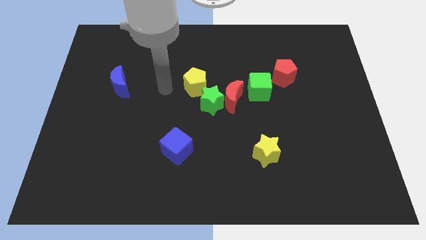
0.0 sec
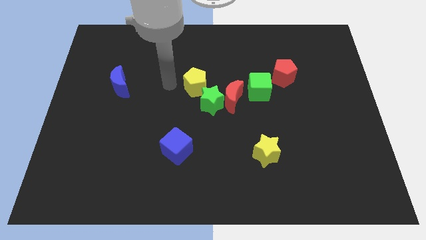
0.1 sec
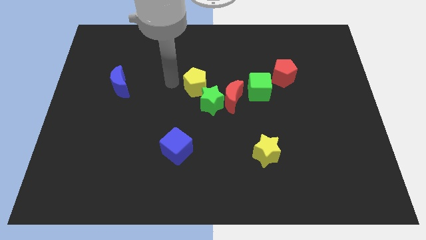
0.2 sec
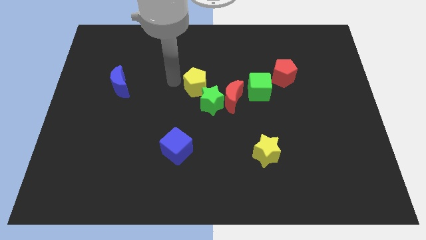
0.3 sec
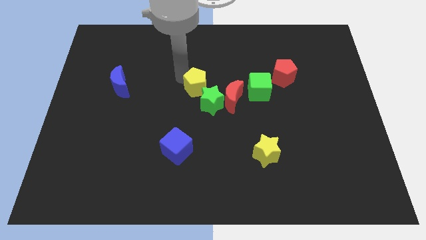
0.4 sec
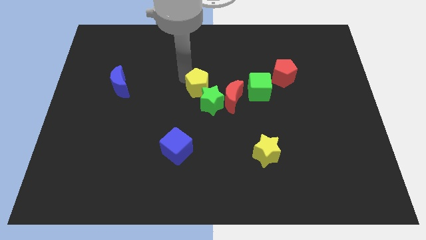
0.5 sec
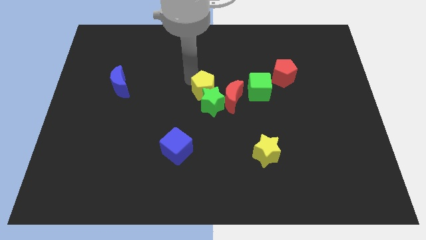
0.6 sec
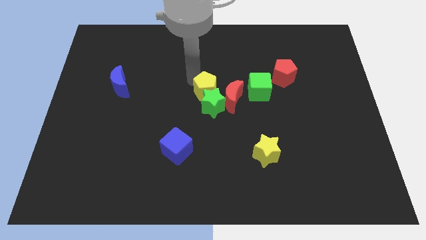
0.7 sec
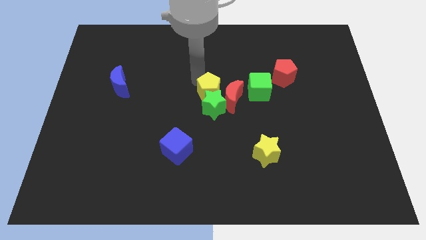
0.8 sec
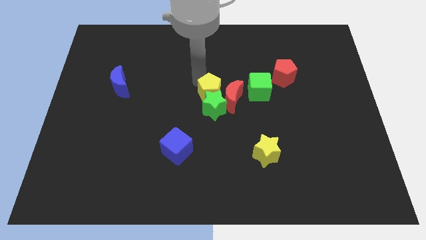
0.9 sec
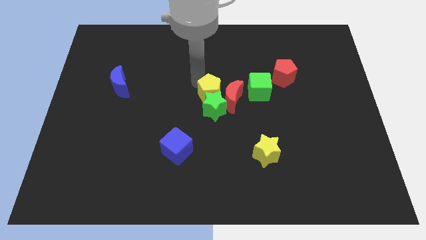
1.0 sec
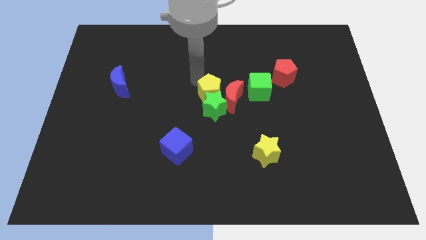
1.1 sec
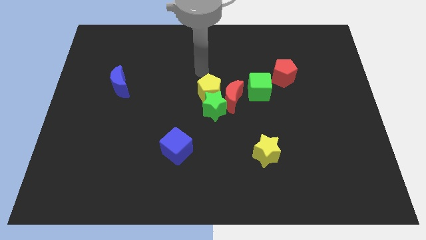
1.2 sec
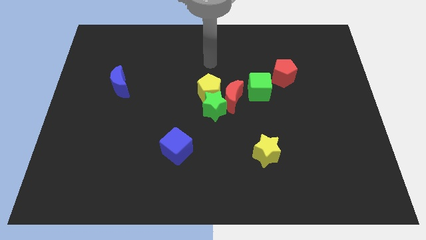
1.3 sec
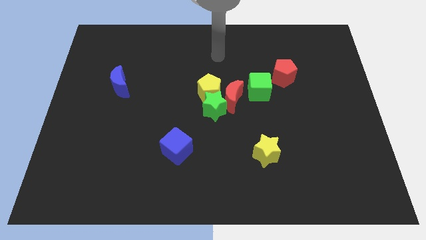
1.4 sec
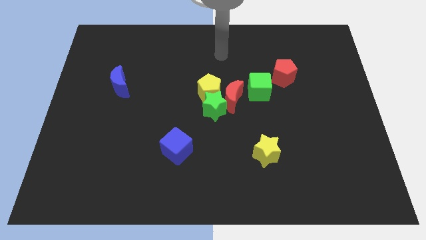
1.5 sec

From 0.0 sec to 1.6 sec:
move the yellow pentagon into the green star

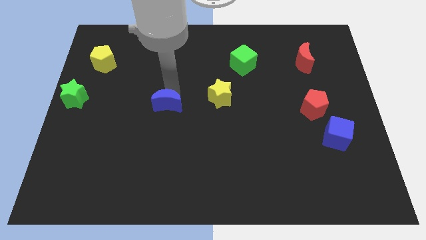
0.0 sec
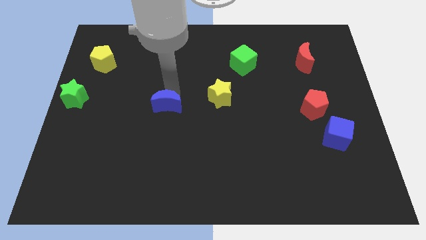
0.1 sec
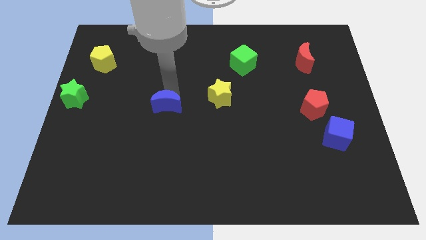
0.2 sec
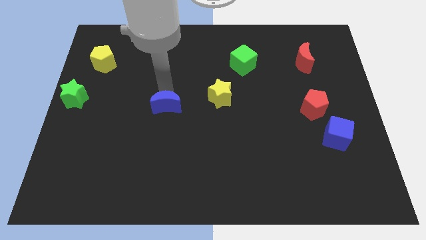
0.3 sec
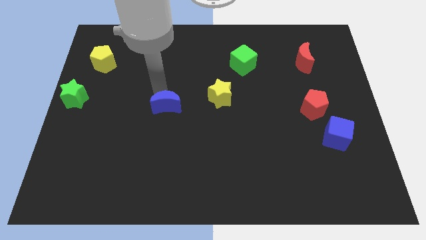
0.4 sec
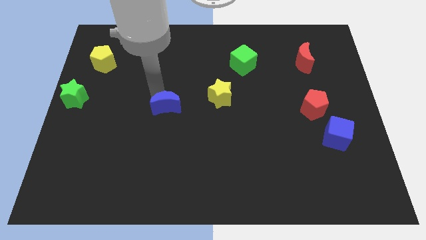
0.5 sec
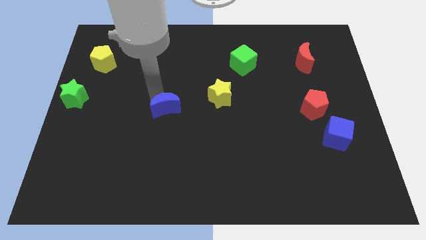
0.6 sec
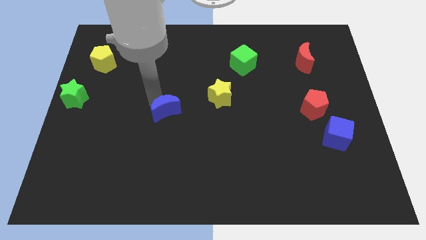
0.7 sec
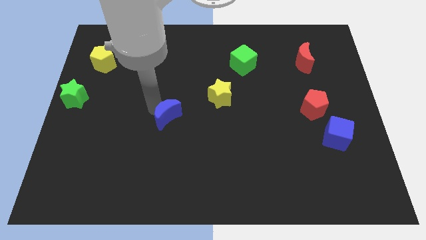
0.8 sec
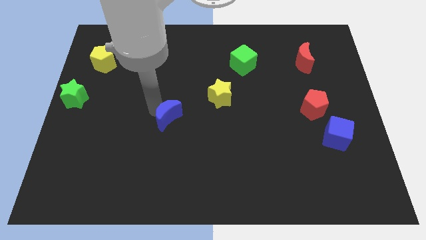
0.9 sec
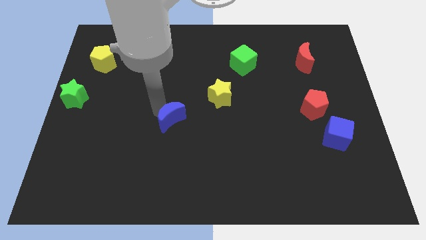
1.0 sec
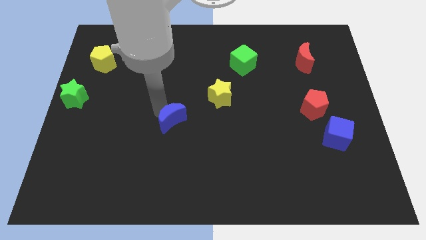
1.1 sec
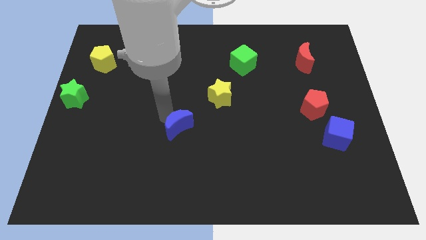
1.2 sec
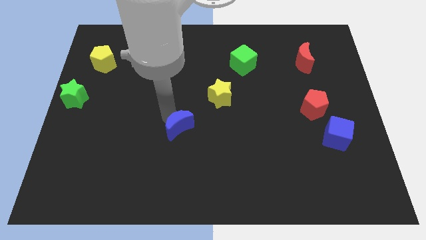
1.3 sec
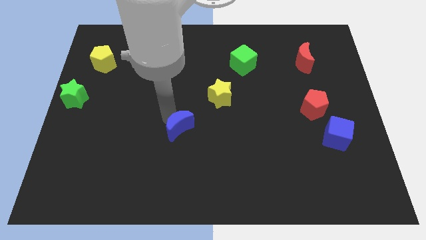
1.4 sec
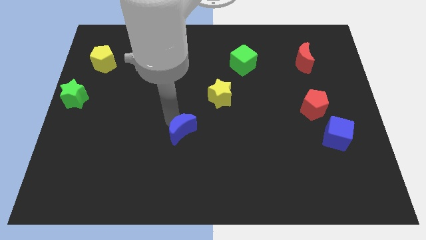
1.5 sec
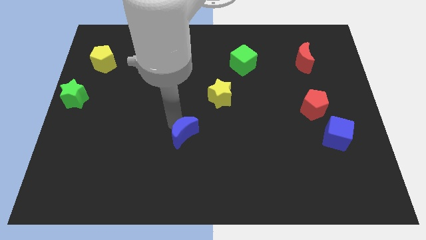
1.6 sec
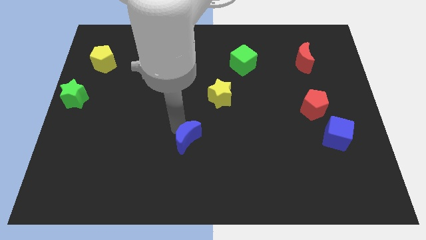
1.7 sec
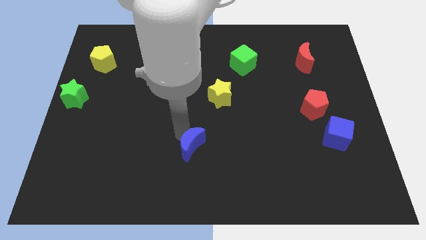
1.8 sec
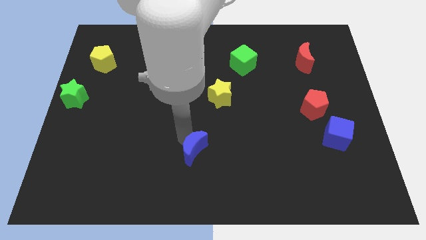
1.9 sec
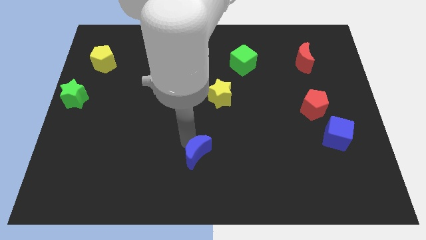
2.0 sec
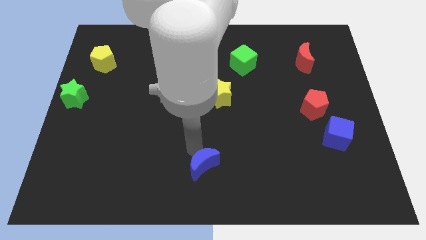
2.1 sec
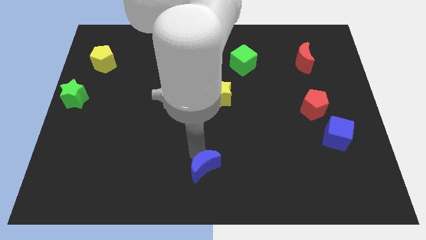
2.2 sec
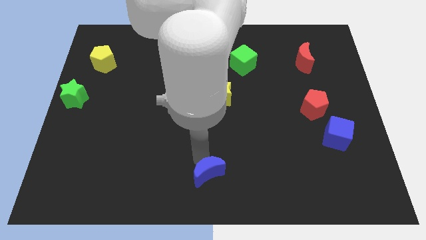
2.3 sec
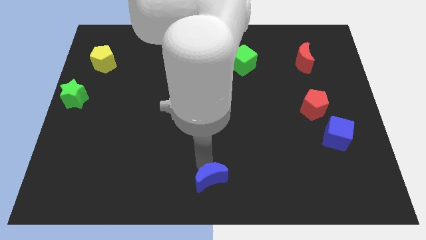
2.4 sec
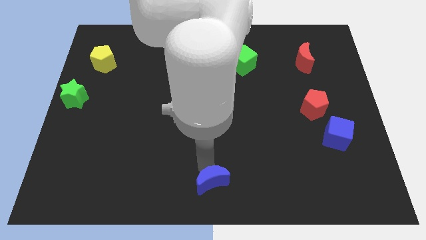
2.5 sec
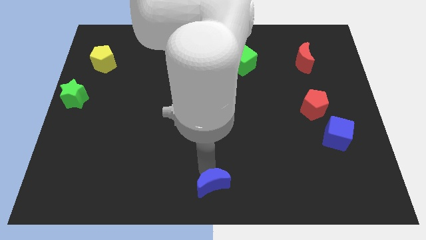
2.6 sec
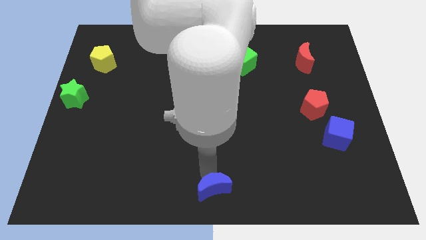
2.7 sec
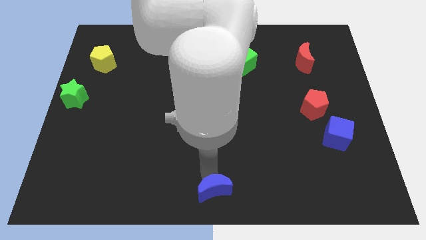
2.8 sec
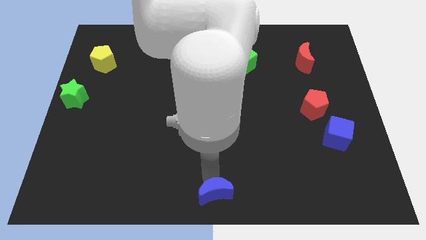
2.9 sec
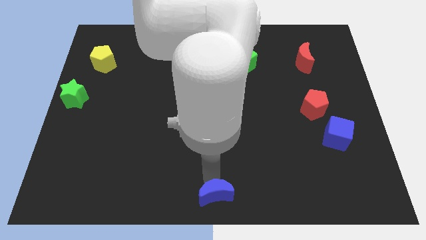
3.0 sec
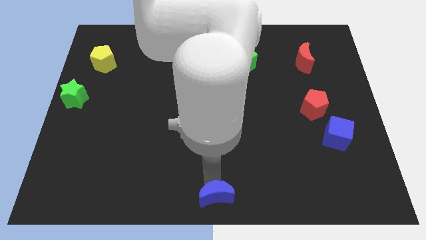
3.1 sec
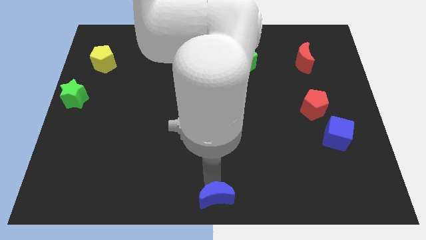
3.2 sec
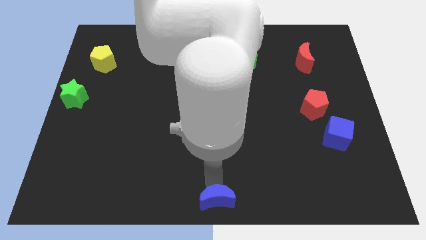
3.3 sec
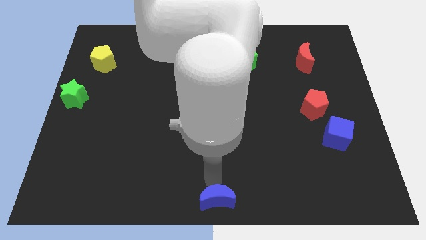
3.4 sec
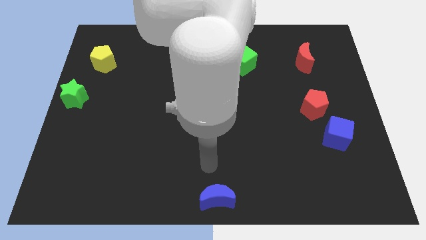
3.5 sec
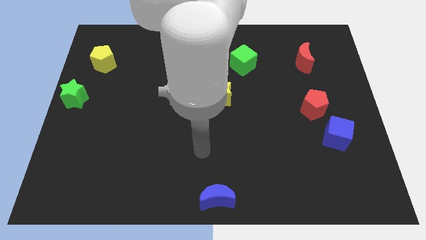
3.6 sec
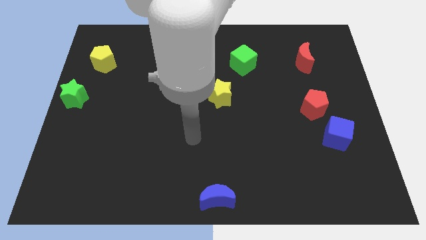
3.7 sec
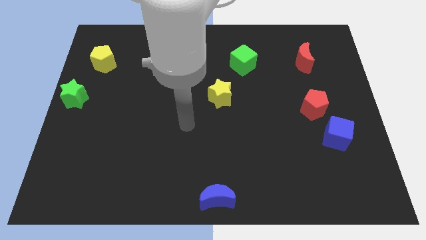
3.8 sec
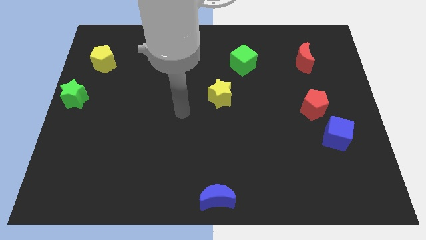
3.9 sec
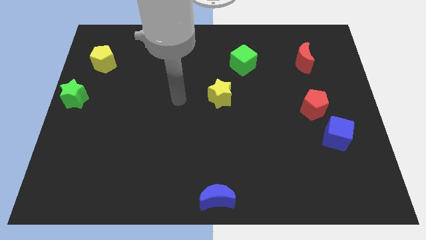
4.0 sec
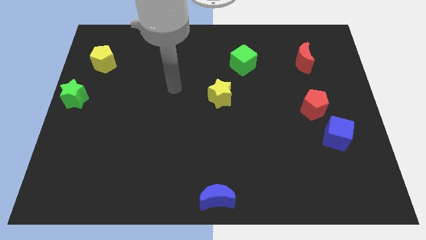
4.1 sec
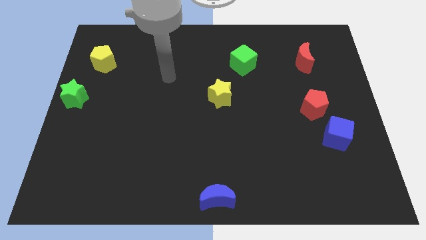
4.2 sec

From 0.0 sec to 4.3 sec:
place the blue moon at the bottom center of the board

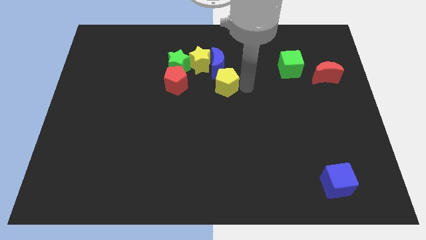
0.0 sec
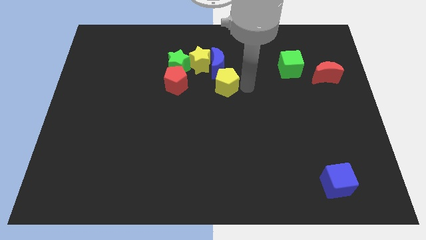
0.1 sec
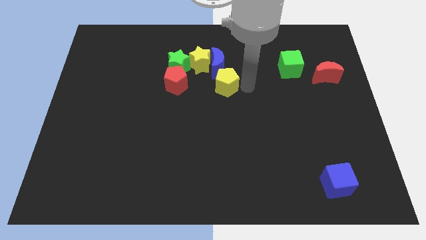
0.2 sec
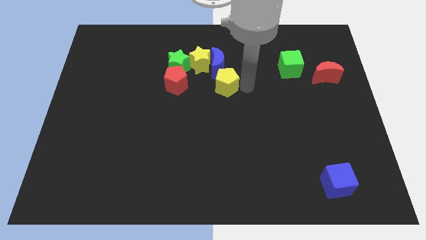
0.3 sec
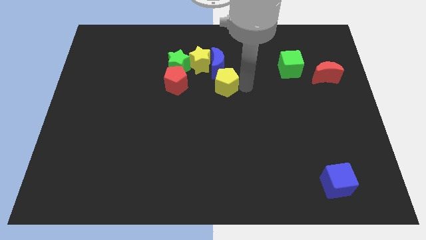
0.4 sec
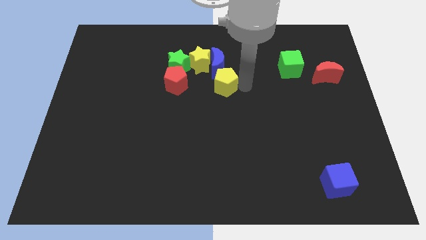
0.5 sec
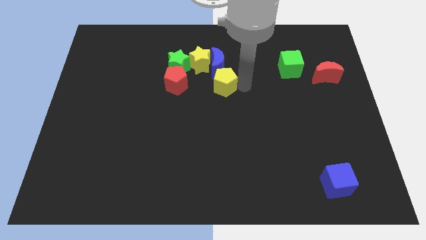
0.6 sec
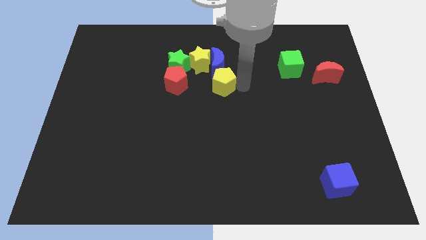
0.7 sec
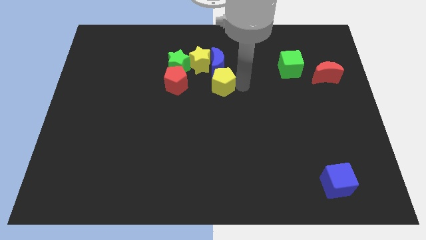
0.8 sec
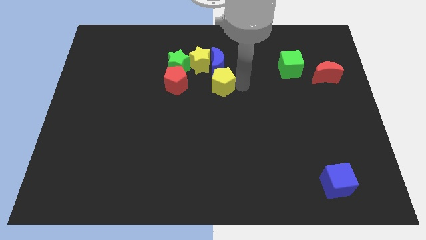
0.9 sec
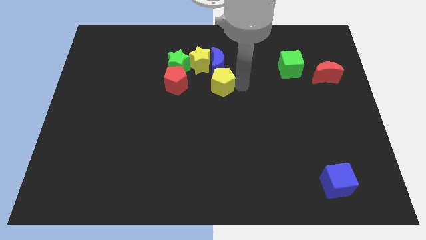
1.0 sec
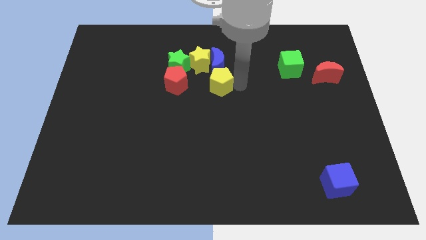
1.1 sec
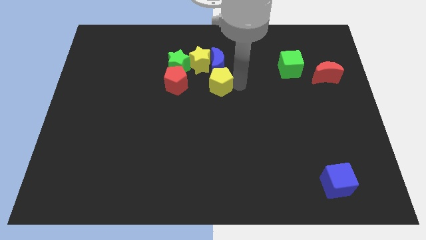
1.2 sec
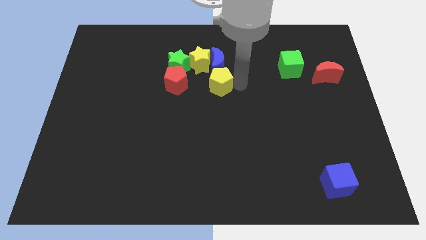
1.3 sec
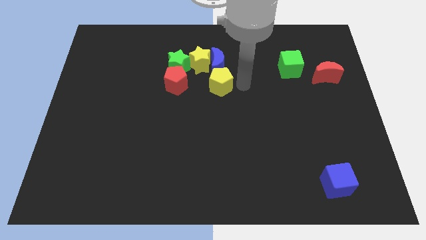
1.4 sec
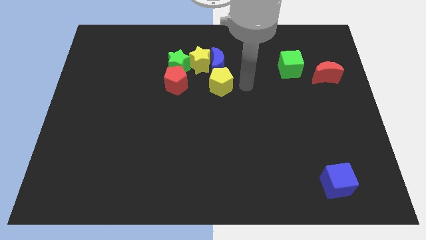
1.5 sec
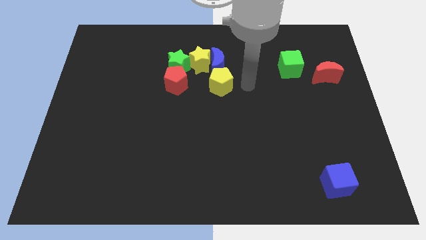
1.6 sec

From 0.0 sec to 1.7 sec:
push the yellow pentagon at the bottom of the blue crescent

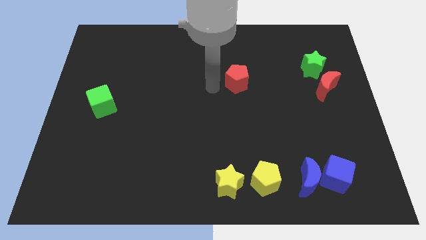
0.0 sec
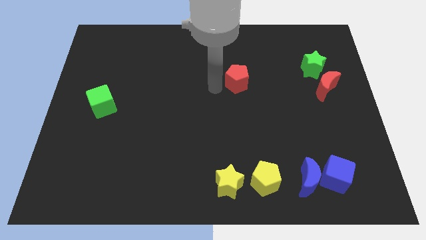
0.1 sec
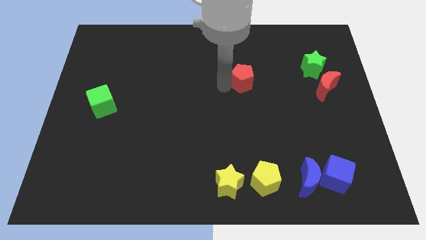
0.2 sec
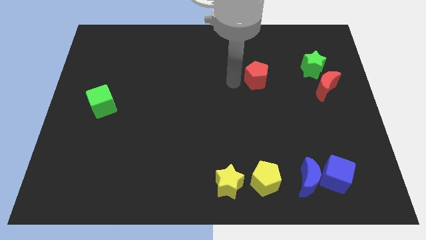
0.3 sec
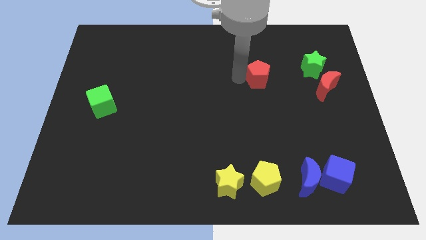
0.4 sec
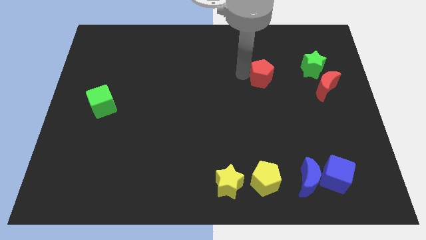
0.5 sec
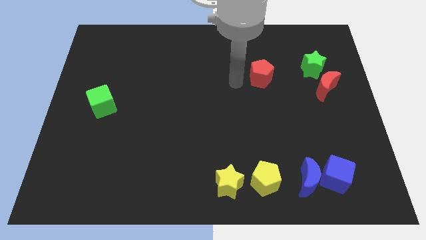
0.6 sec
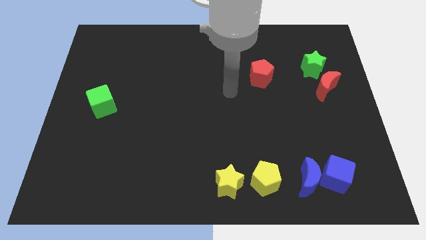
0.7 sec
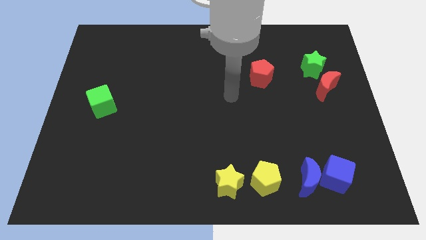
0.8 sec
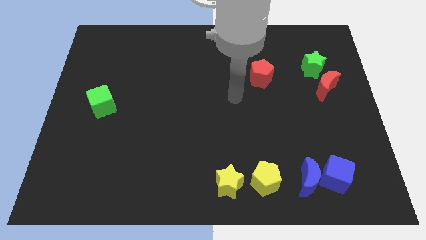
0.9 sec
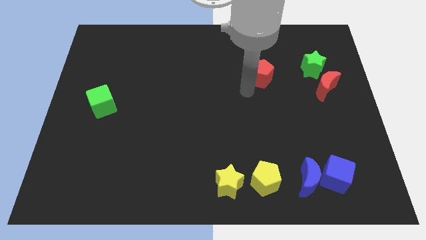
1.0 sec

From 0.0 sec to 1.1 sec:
move red pentagon towards red moon

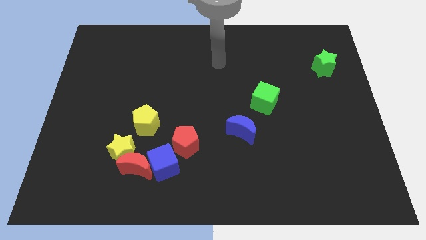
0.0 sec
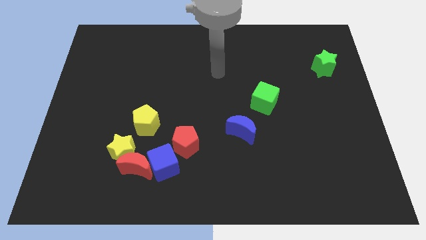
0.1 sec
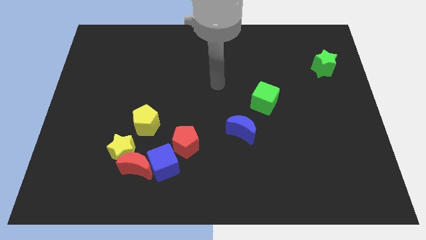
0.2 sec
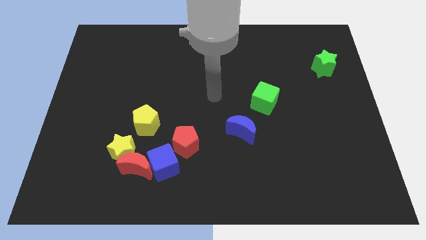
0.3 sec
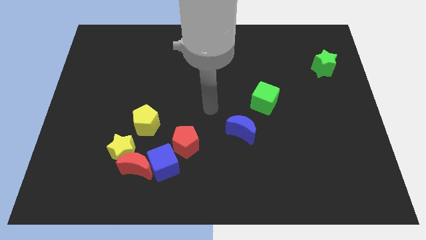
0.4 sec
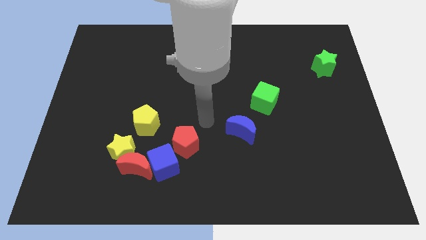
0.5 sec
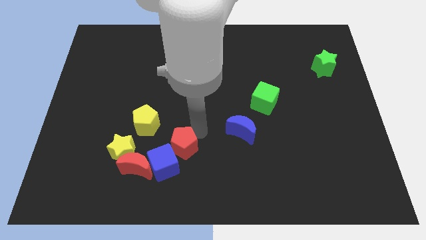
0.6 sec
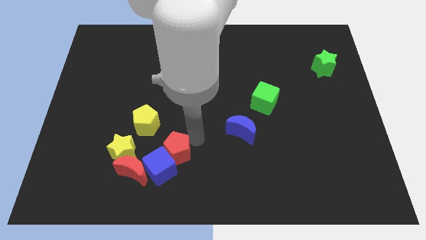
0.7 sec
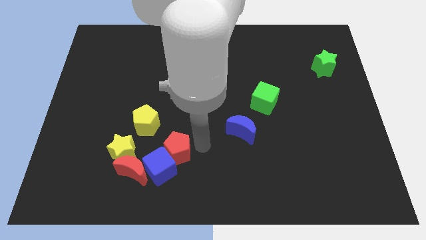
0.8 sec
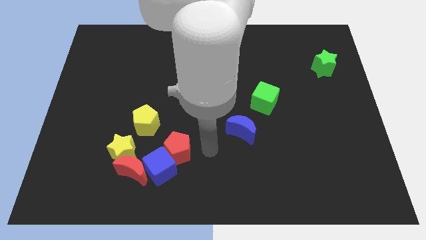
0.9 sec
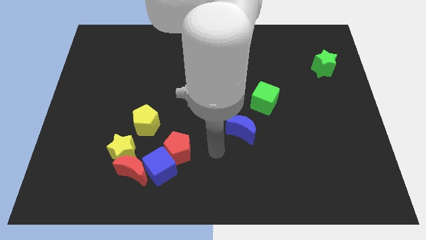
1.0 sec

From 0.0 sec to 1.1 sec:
push the blue cube using the red pentagon
